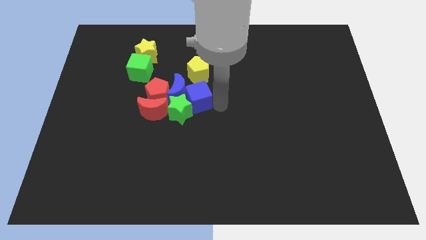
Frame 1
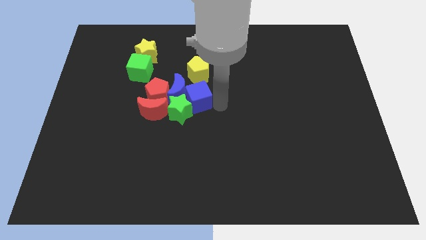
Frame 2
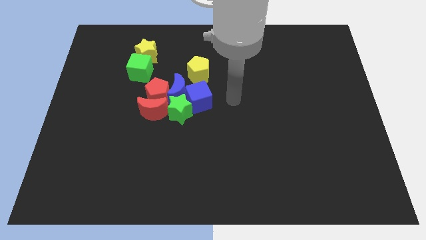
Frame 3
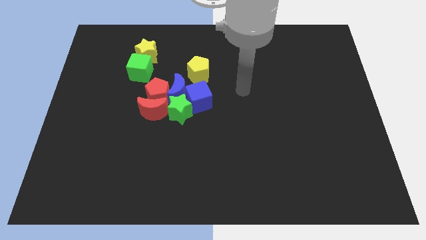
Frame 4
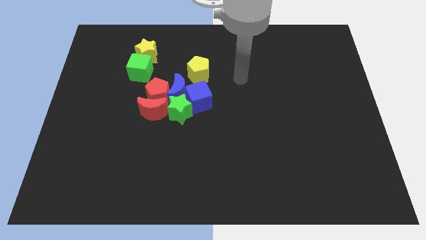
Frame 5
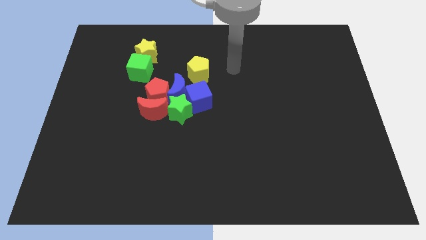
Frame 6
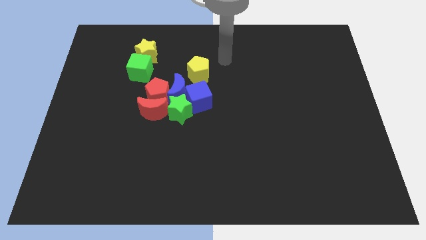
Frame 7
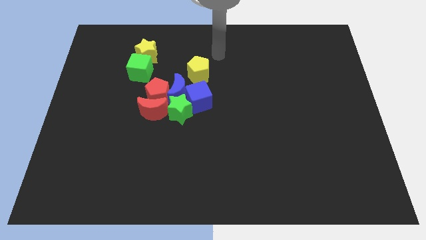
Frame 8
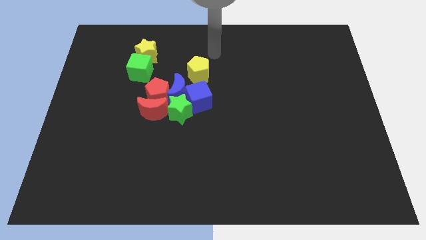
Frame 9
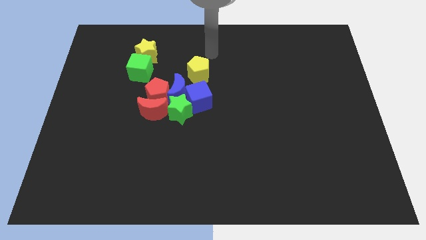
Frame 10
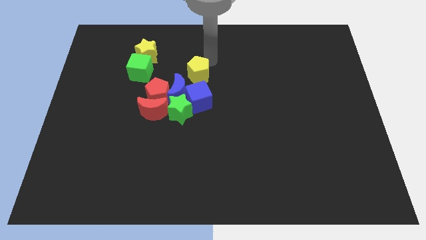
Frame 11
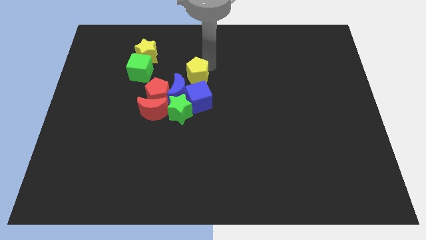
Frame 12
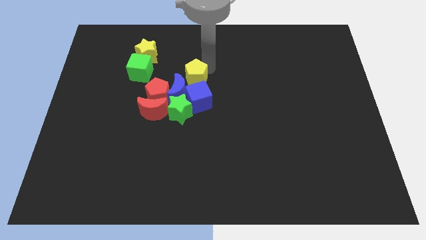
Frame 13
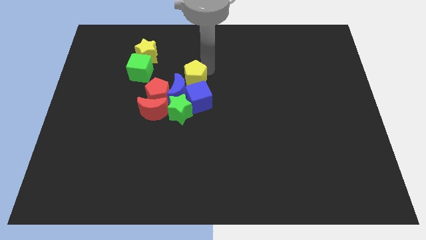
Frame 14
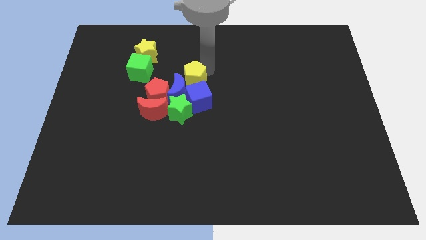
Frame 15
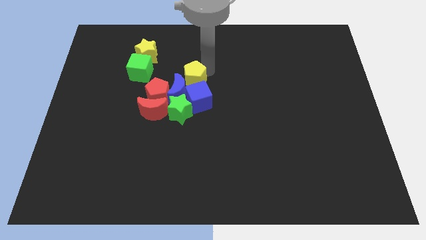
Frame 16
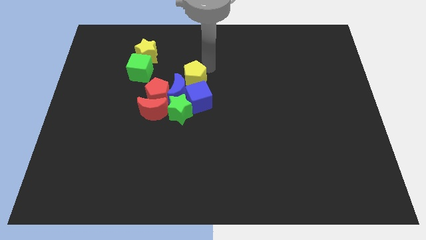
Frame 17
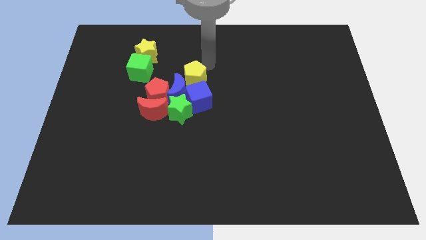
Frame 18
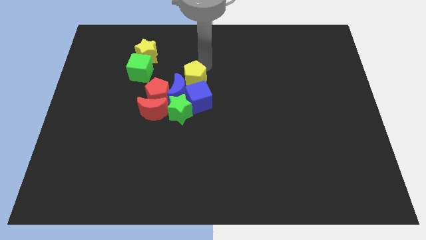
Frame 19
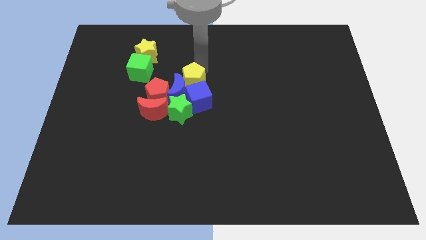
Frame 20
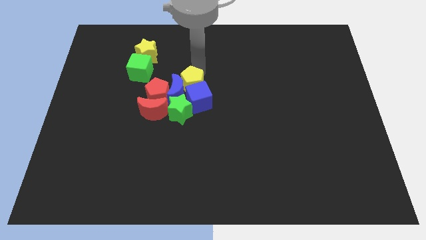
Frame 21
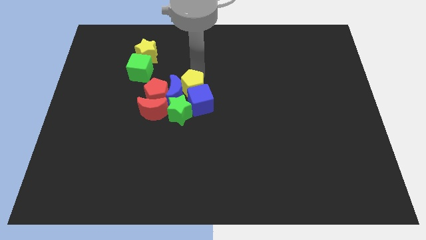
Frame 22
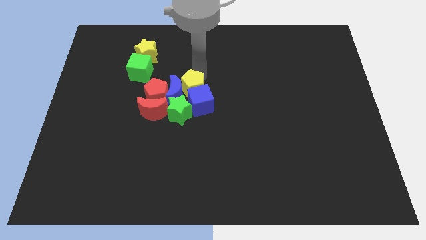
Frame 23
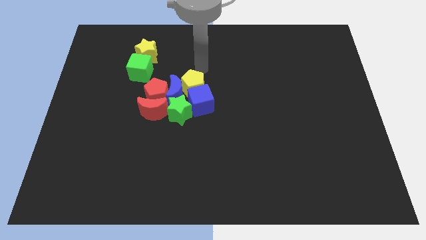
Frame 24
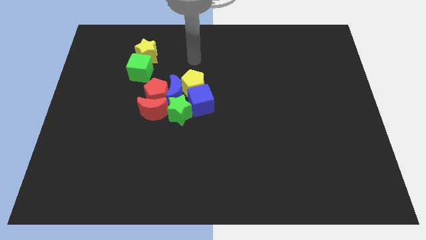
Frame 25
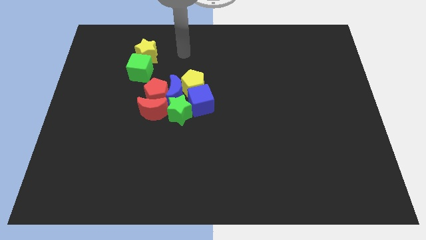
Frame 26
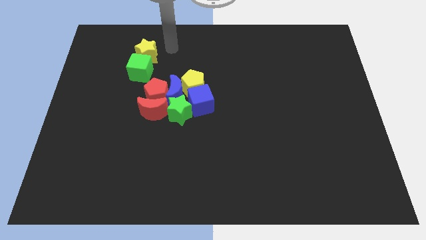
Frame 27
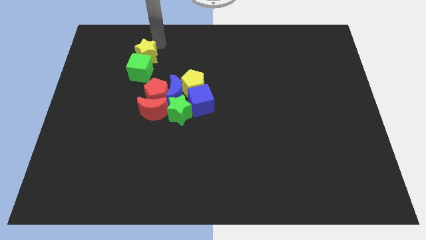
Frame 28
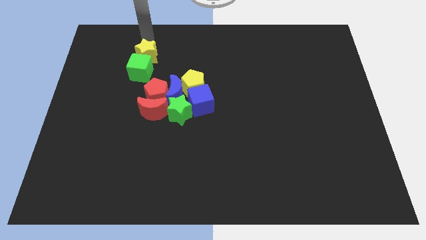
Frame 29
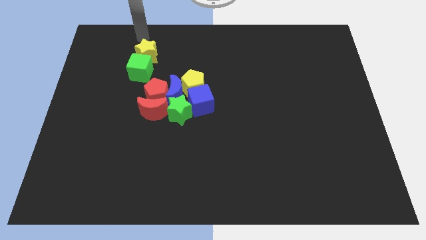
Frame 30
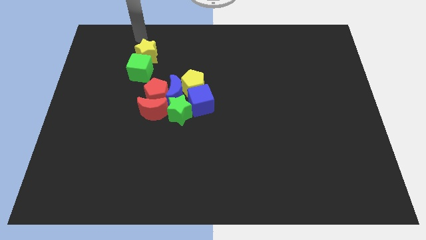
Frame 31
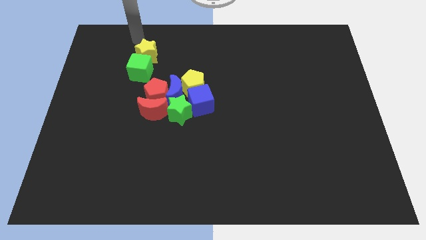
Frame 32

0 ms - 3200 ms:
move the yellow pentagon into the blue cube

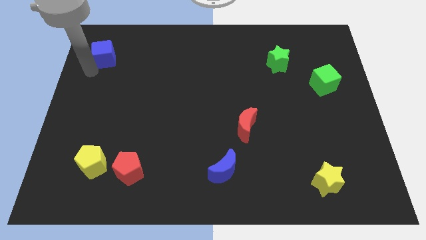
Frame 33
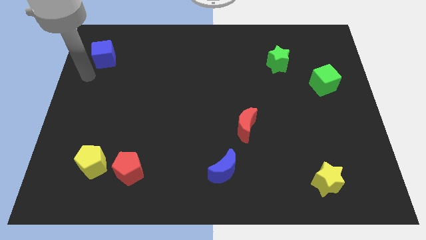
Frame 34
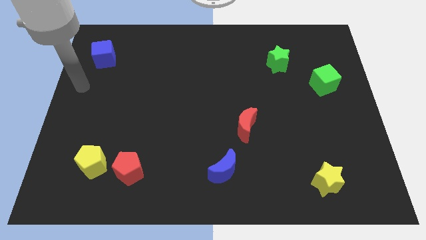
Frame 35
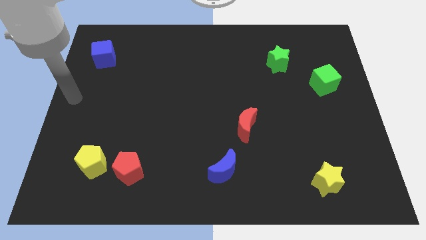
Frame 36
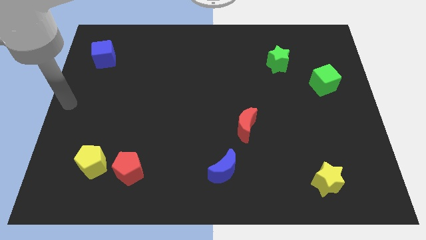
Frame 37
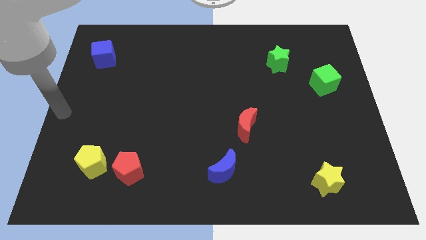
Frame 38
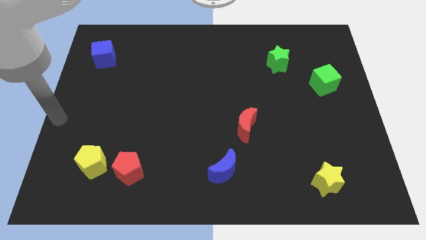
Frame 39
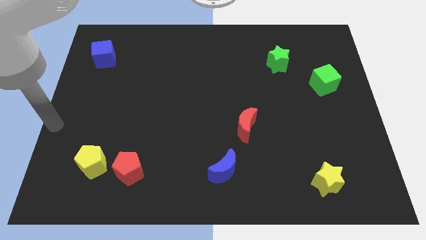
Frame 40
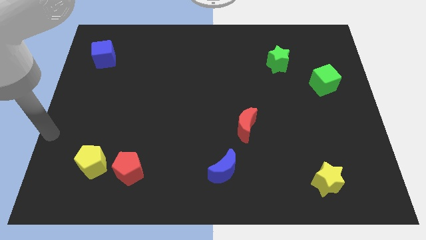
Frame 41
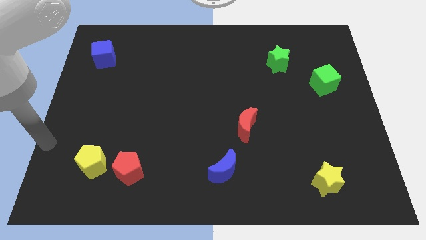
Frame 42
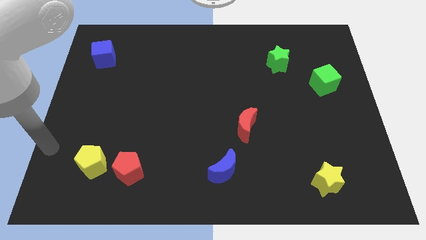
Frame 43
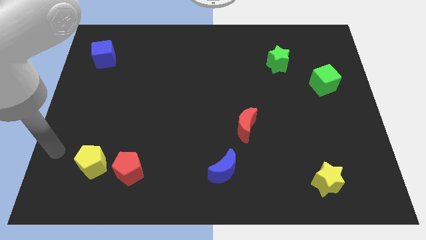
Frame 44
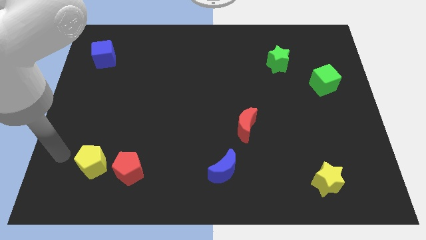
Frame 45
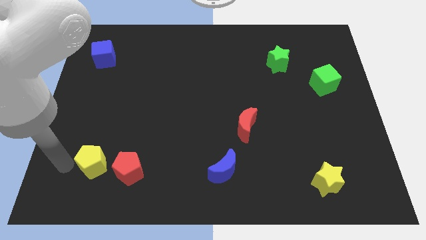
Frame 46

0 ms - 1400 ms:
move your arm to the left of yellow pentagon

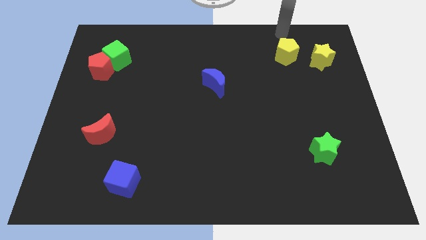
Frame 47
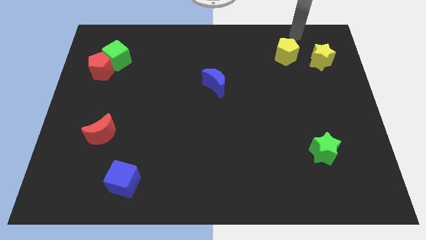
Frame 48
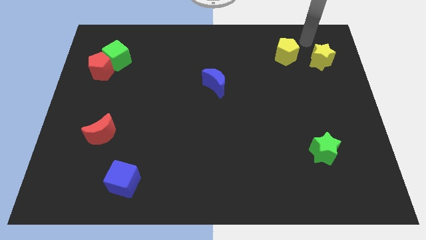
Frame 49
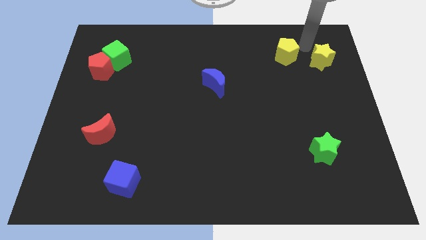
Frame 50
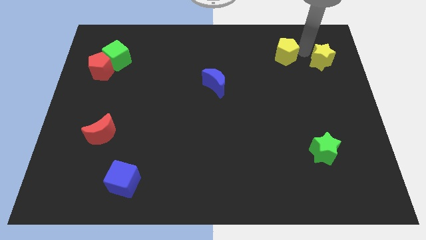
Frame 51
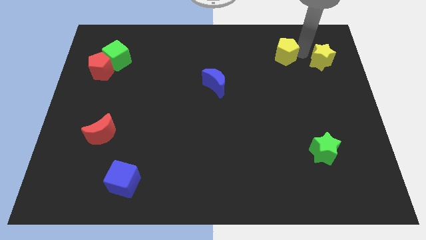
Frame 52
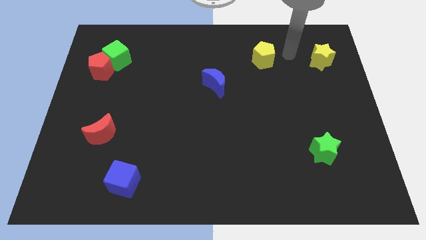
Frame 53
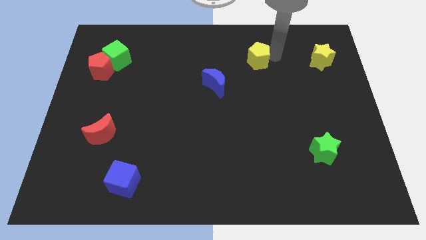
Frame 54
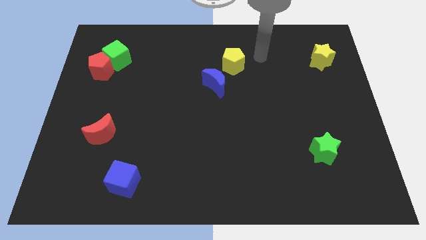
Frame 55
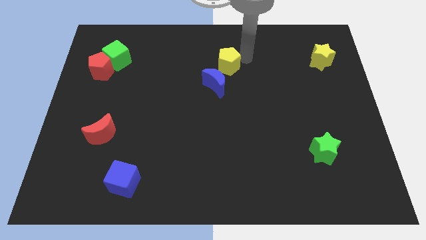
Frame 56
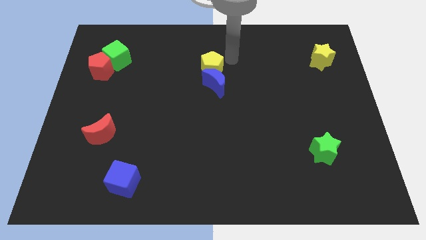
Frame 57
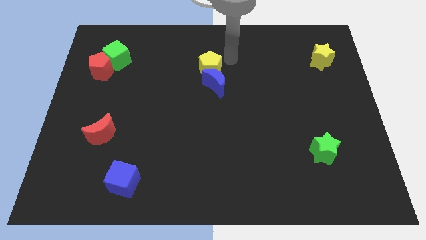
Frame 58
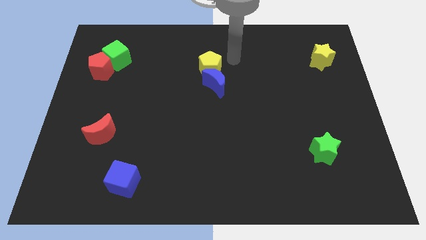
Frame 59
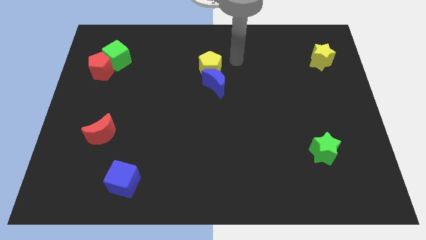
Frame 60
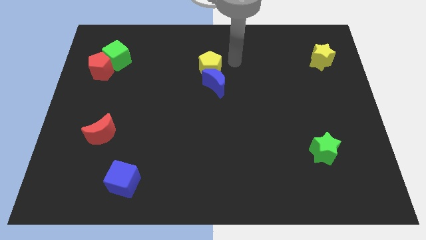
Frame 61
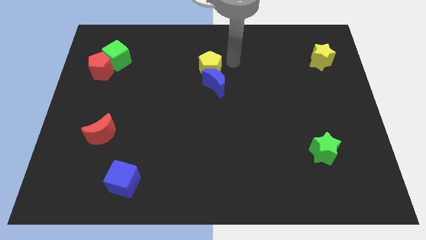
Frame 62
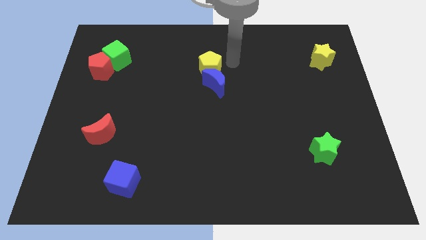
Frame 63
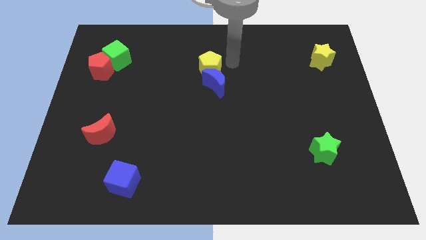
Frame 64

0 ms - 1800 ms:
slide the yellow pentagon to the top of the blue moon

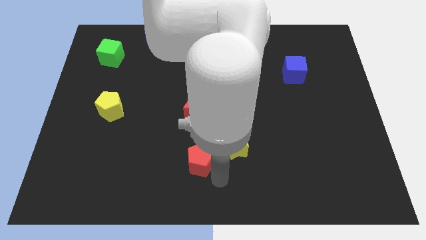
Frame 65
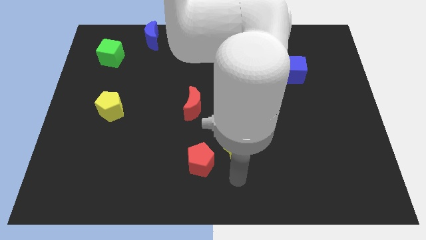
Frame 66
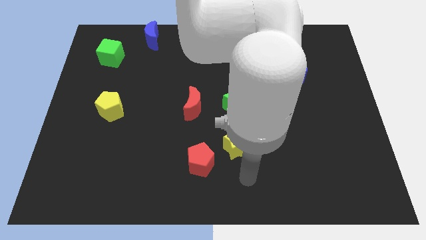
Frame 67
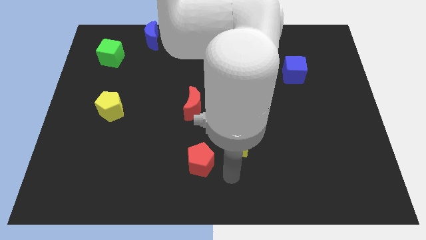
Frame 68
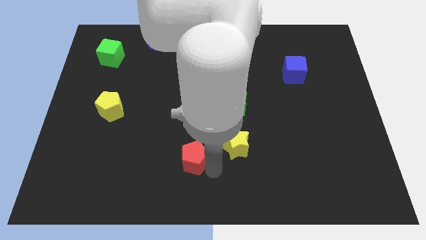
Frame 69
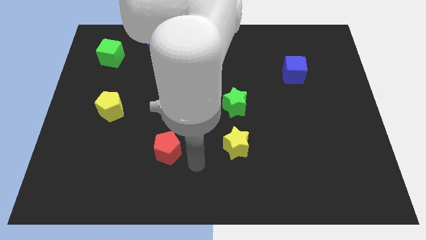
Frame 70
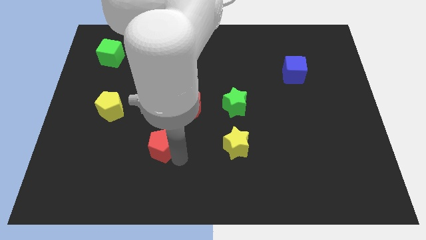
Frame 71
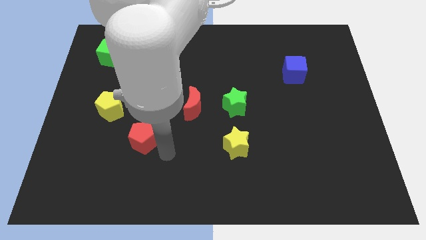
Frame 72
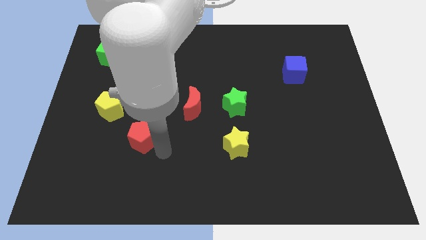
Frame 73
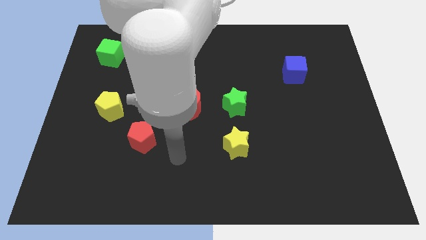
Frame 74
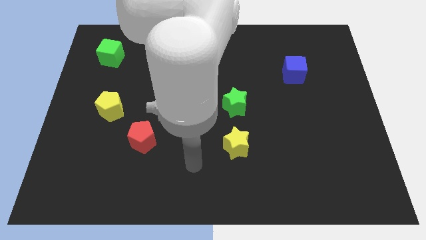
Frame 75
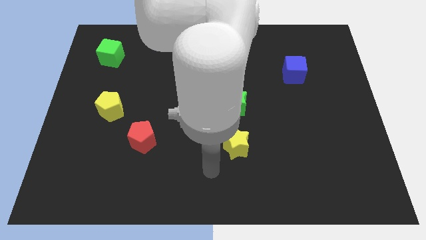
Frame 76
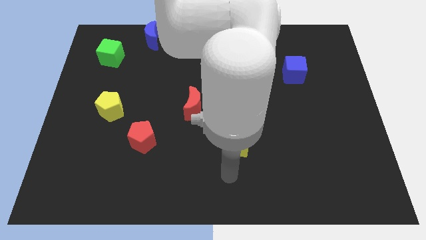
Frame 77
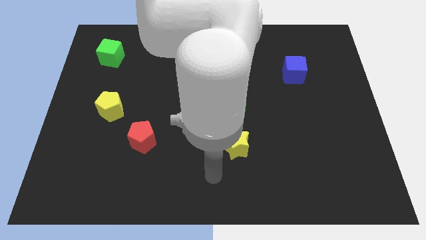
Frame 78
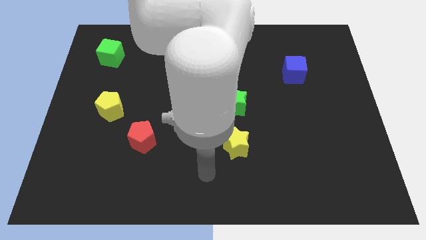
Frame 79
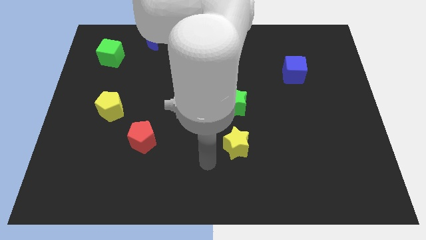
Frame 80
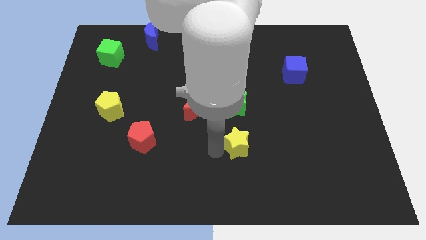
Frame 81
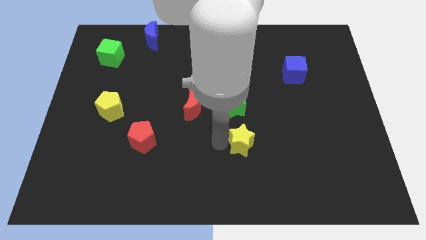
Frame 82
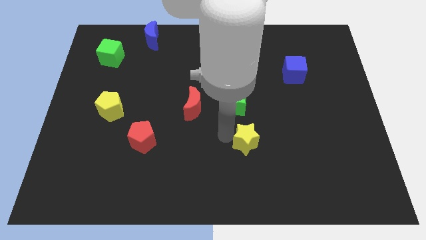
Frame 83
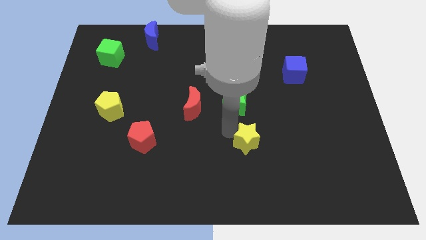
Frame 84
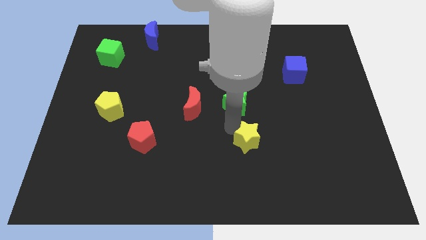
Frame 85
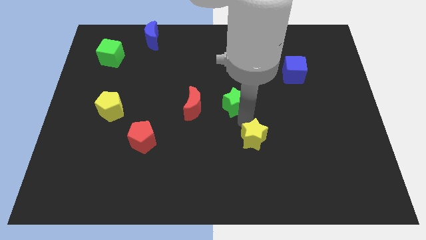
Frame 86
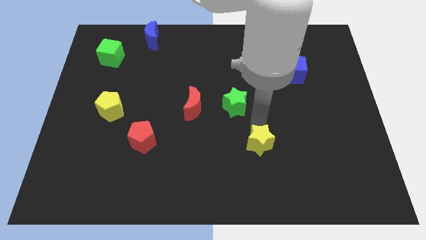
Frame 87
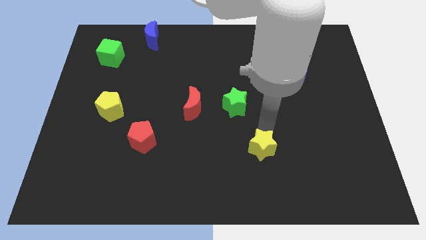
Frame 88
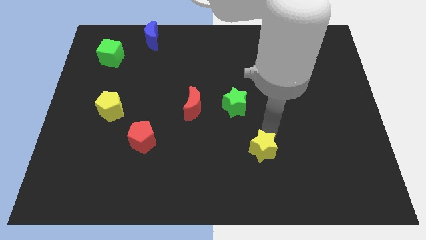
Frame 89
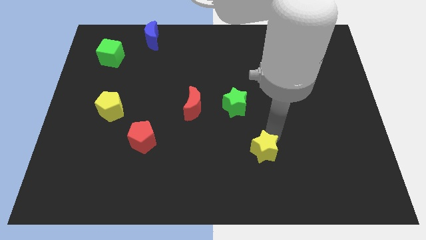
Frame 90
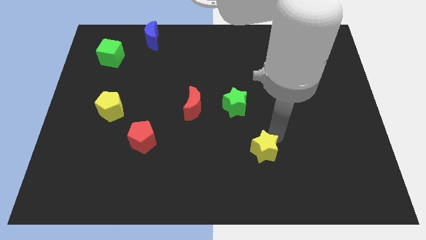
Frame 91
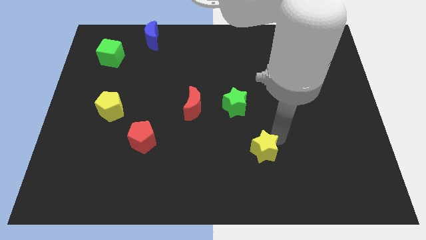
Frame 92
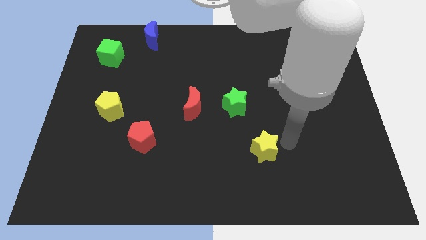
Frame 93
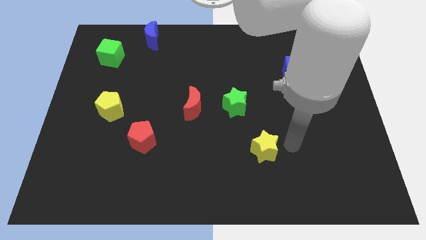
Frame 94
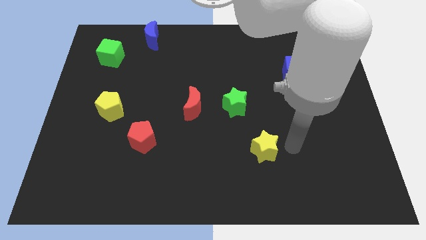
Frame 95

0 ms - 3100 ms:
push the red pentagon diagonal to the yellow pentagon
